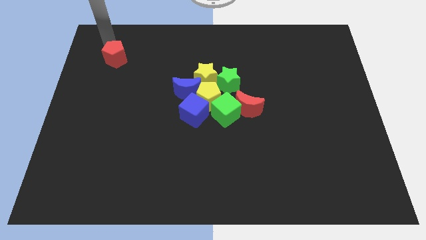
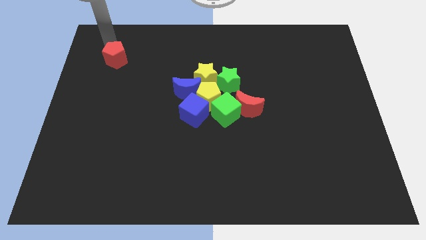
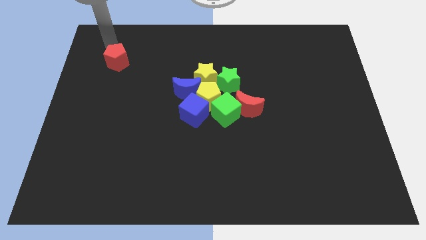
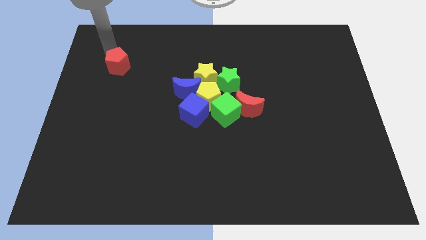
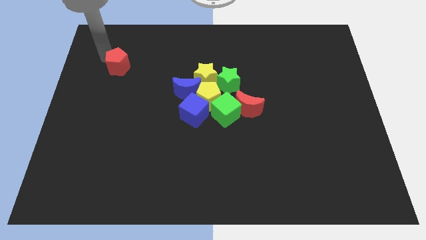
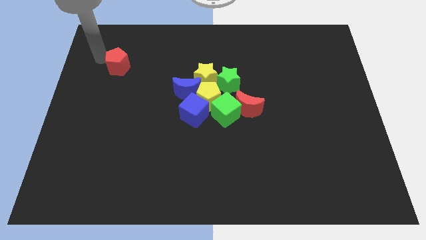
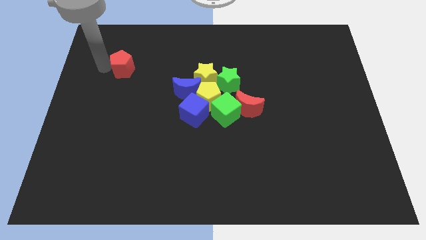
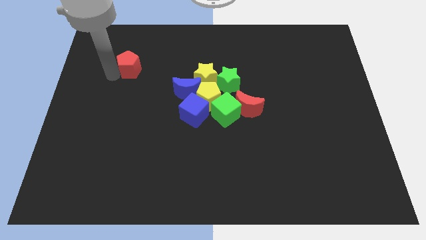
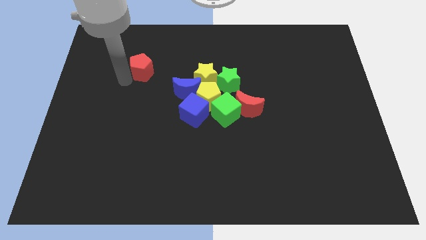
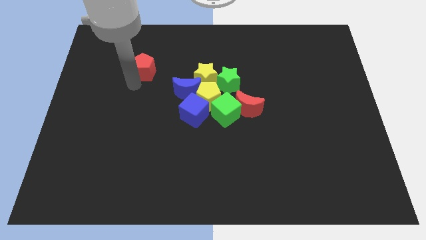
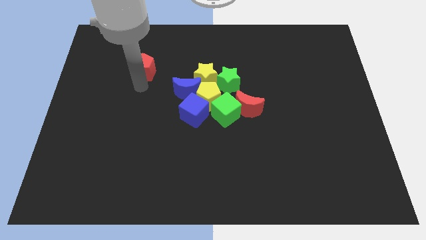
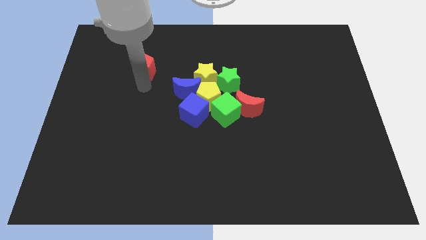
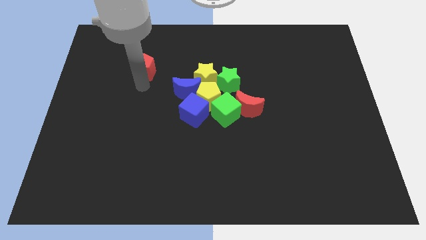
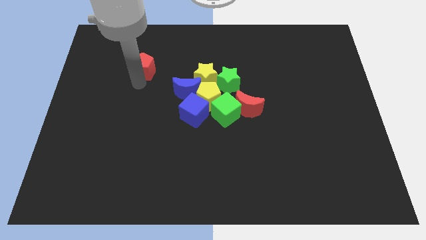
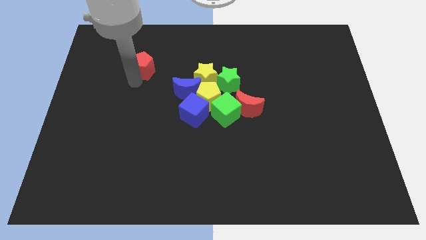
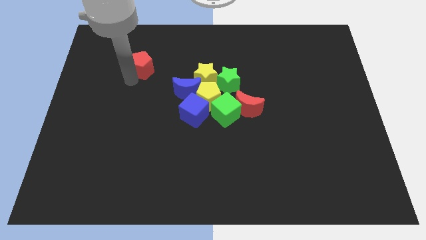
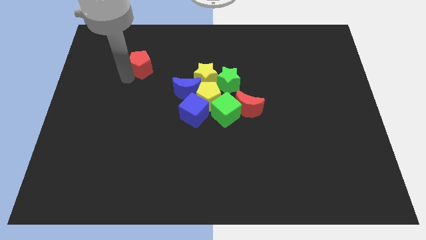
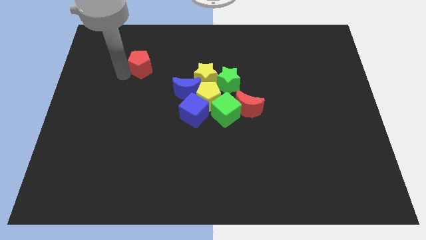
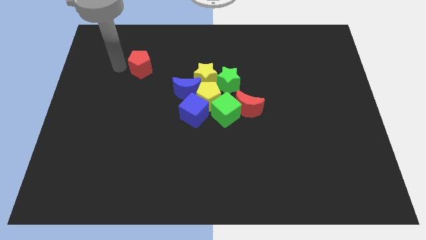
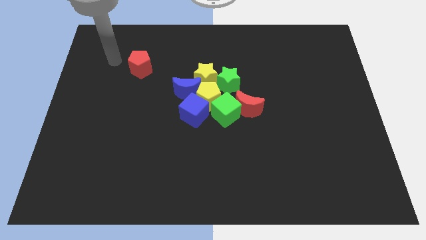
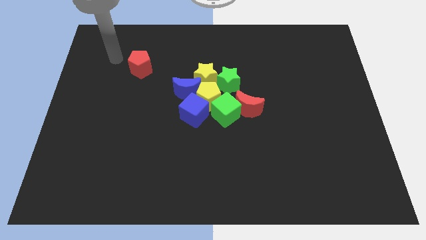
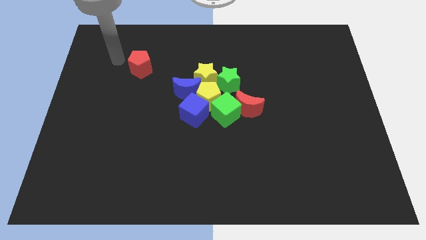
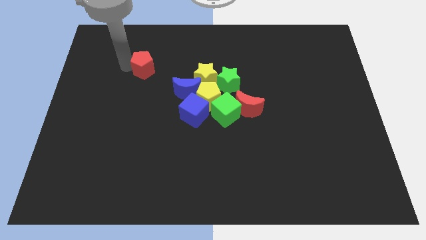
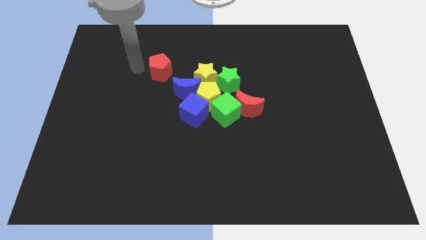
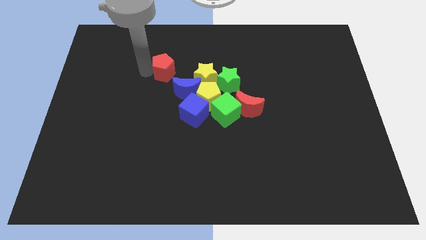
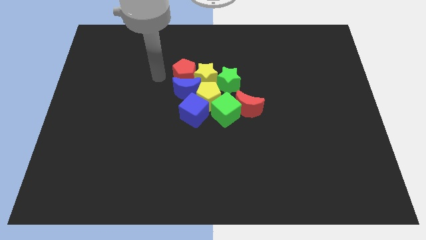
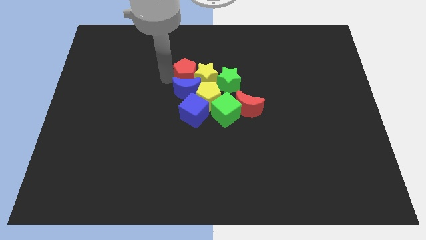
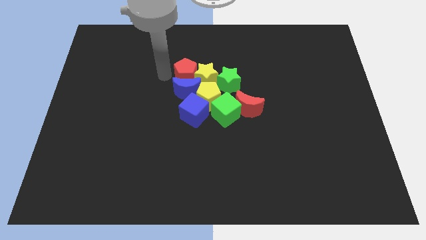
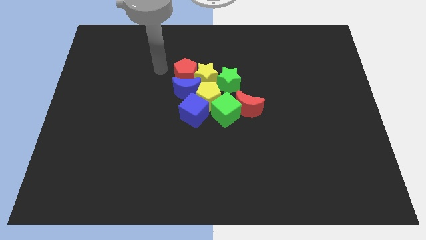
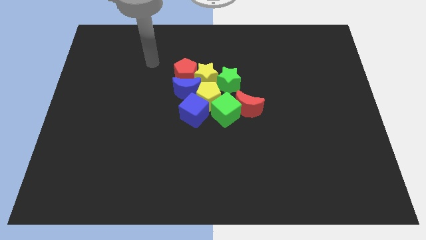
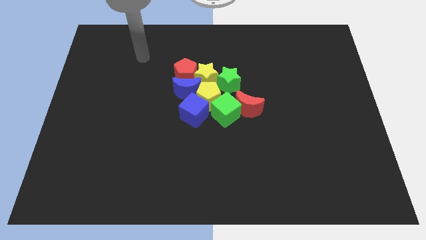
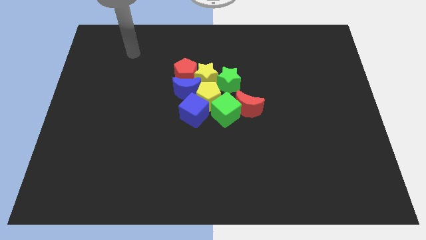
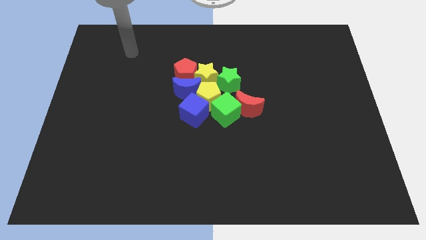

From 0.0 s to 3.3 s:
move the red pentagon to the left of the yellow star

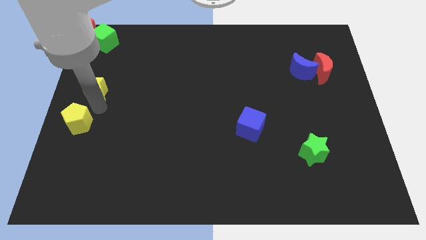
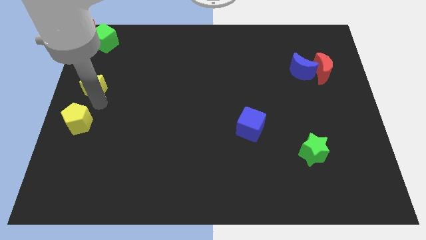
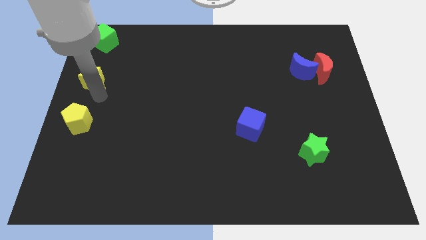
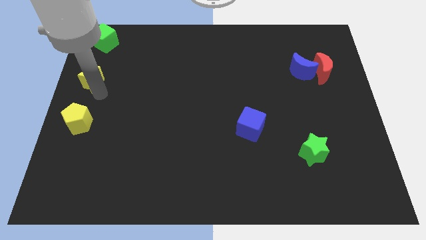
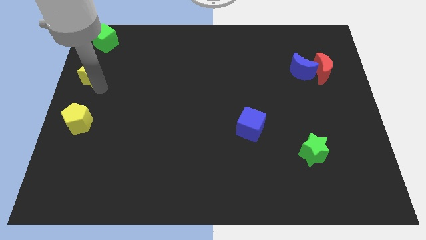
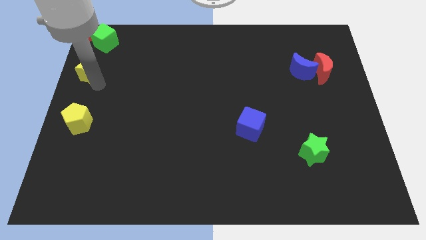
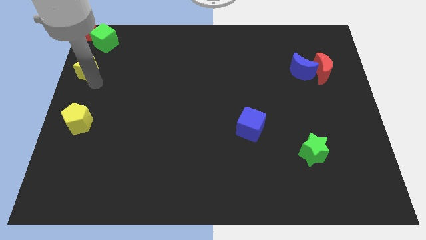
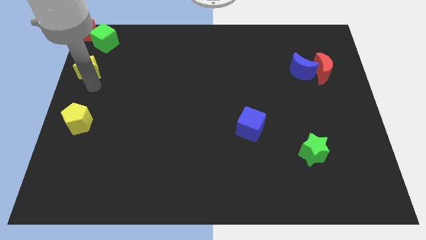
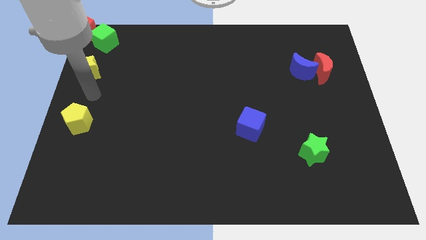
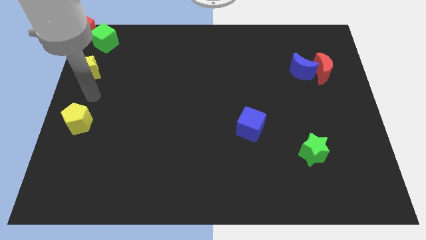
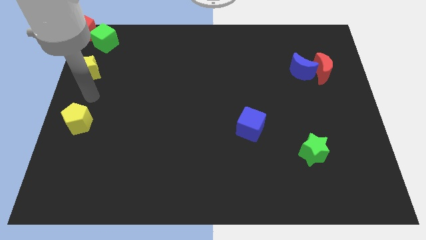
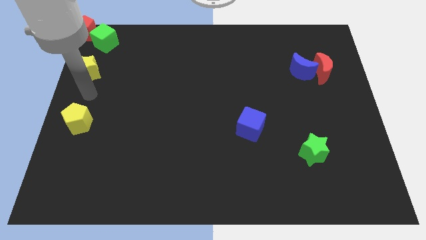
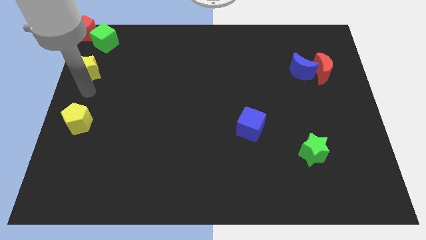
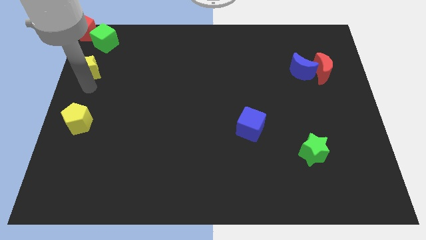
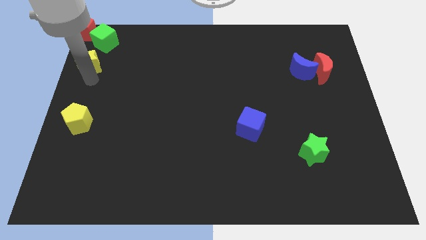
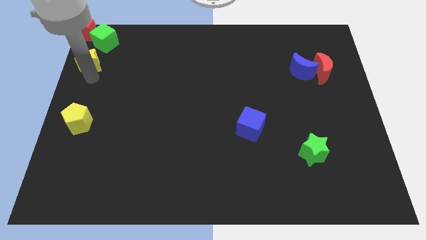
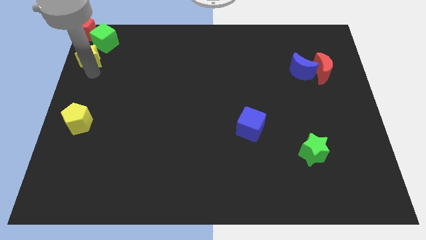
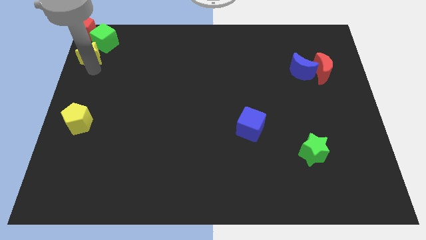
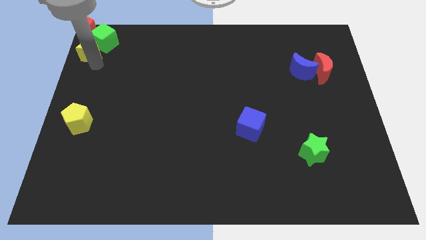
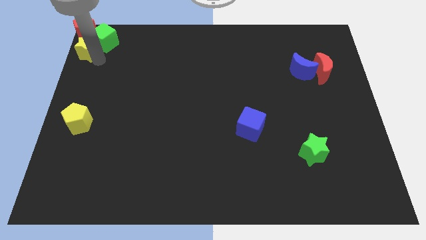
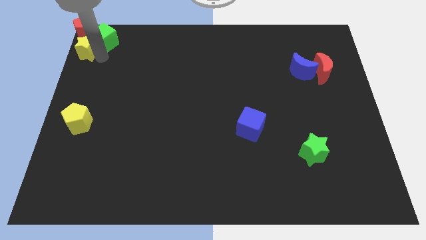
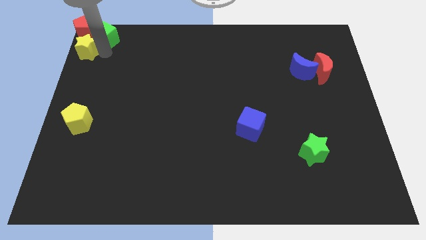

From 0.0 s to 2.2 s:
move the yellow star to the bottom of the red pentagon

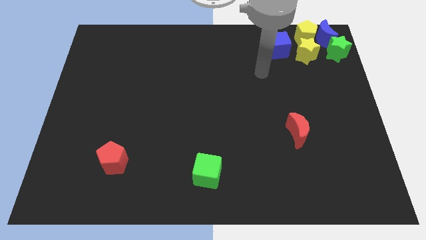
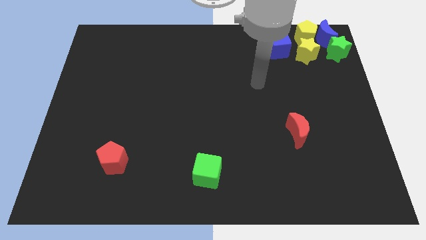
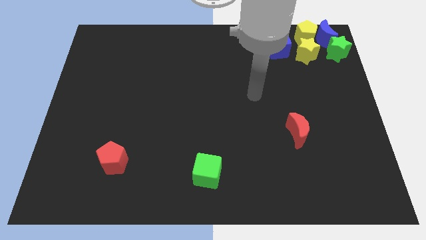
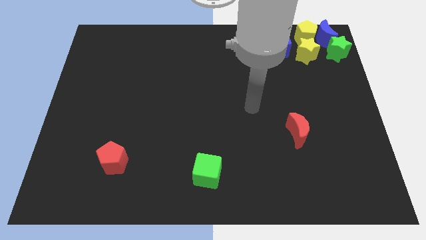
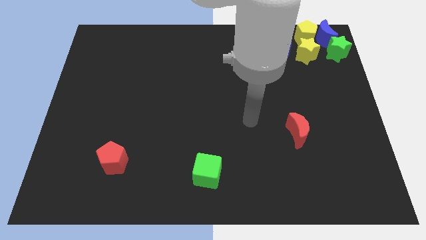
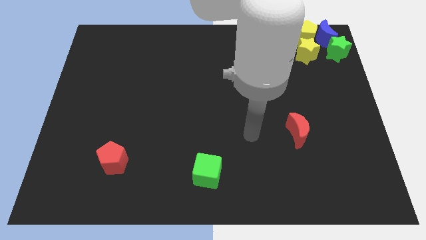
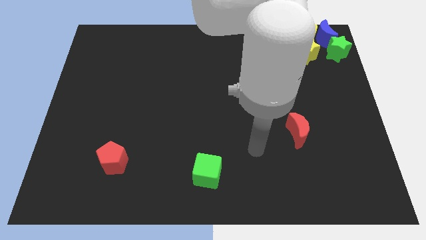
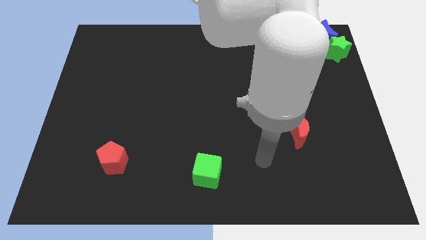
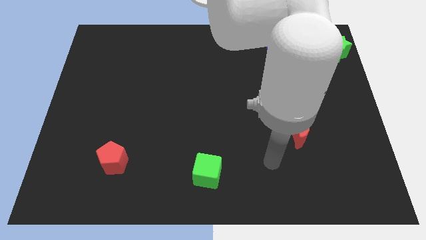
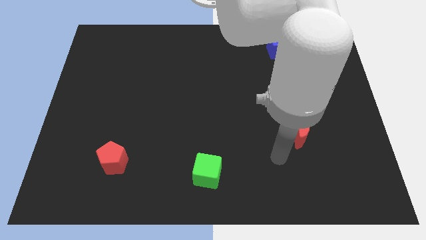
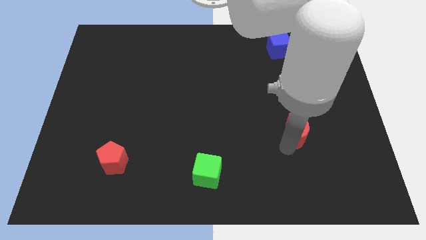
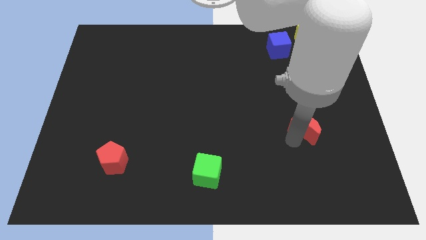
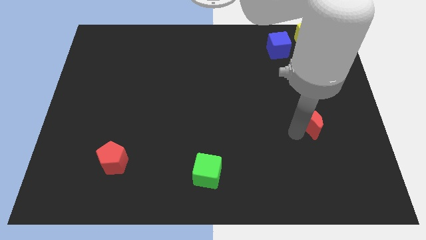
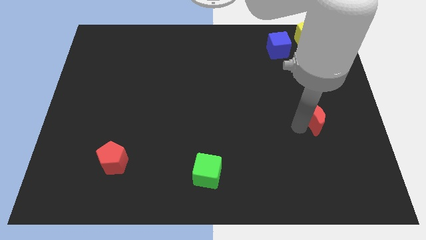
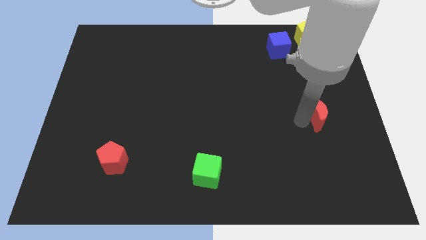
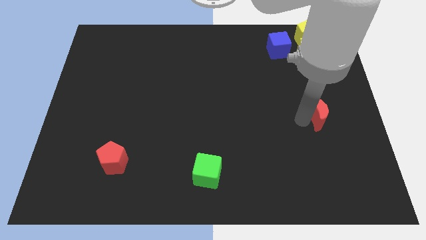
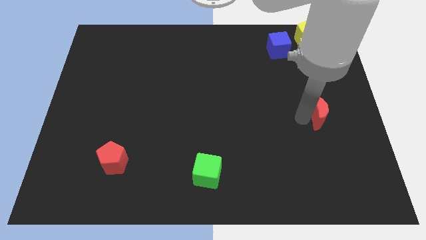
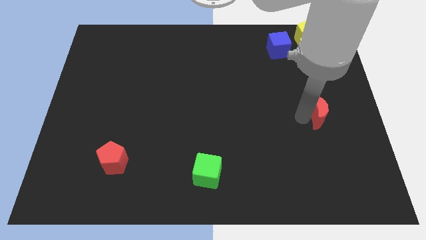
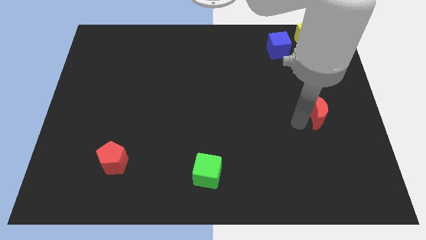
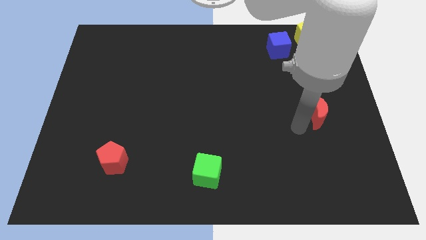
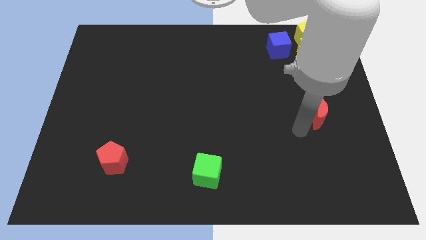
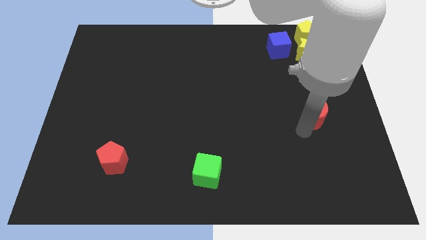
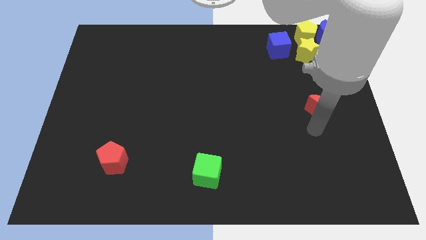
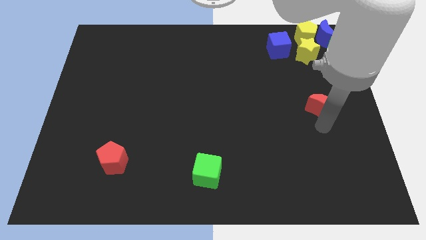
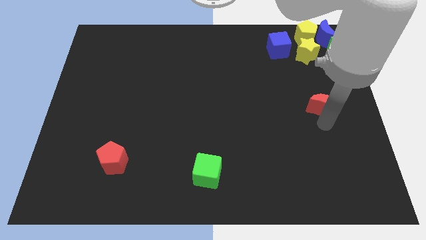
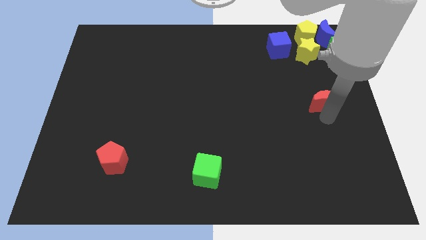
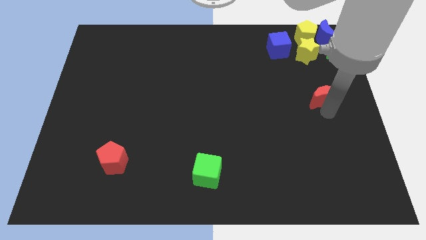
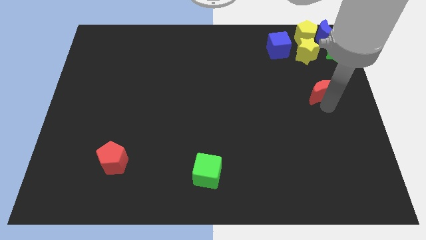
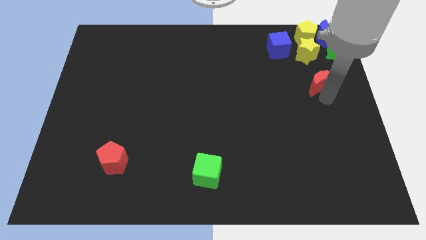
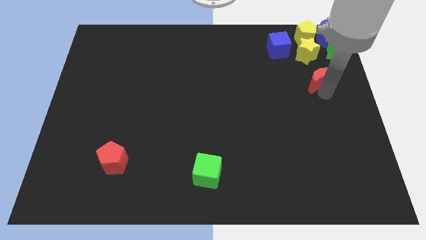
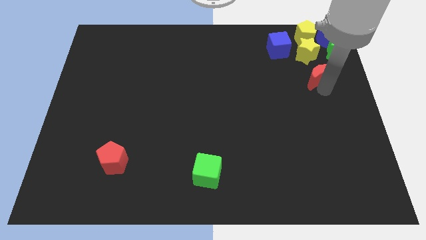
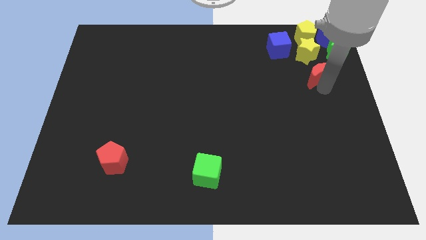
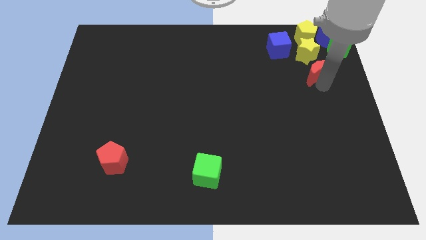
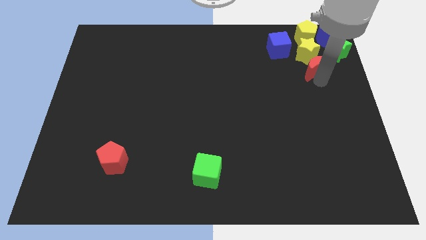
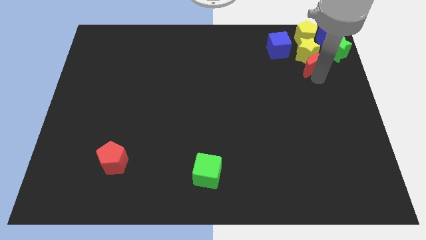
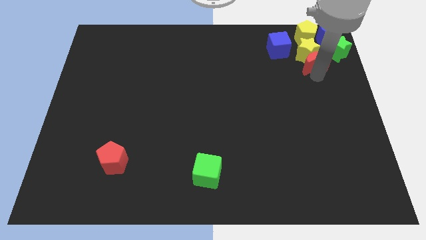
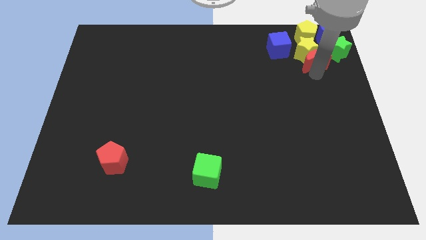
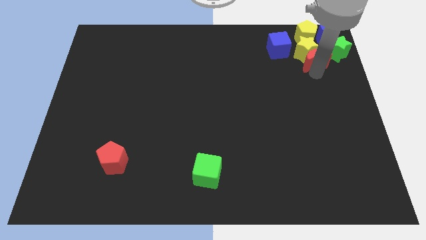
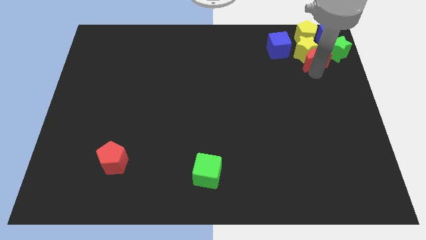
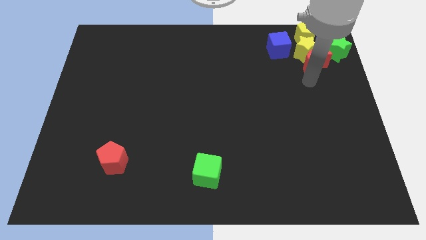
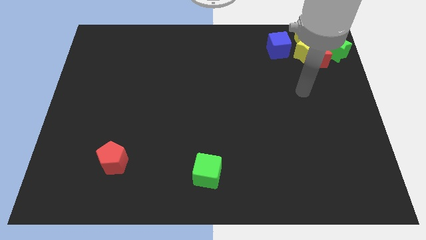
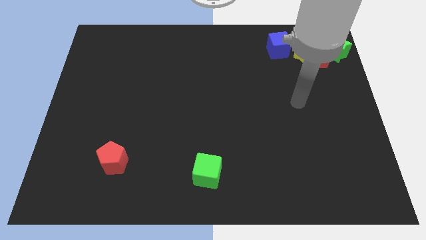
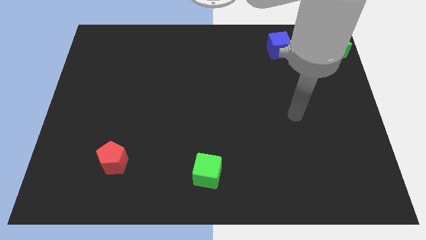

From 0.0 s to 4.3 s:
place the red crescent below the yellow star
